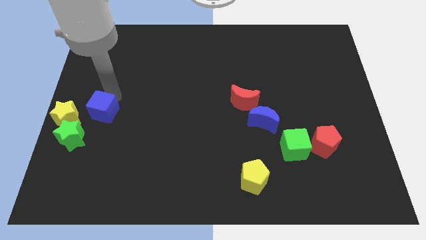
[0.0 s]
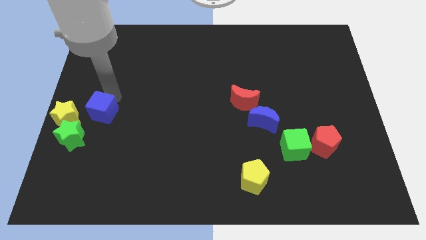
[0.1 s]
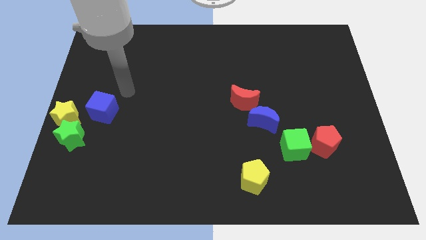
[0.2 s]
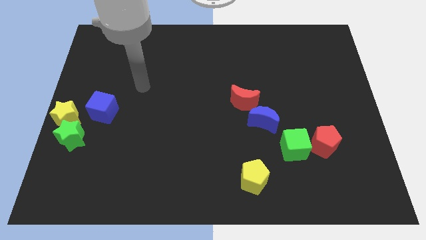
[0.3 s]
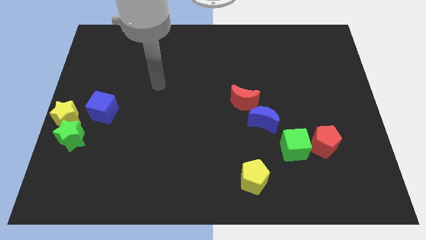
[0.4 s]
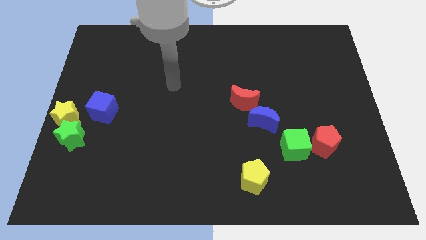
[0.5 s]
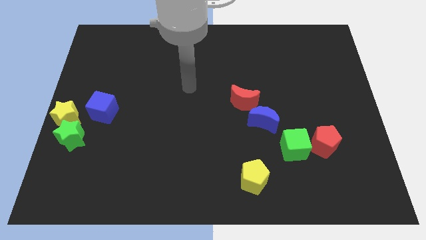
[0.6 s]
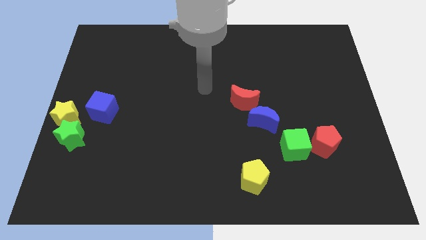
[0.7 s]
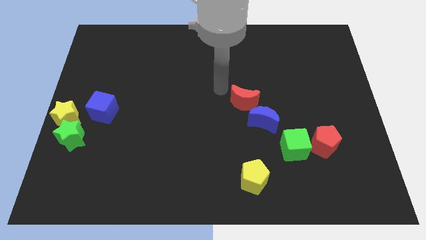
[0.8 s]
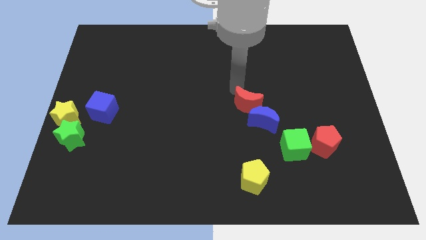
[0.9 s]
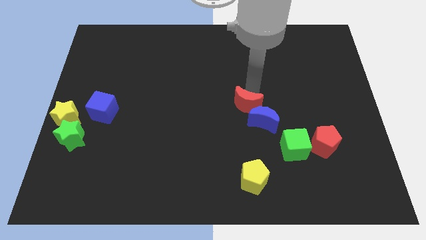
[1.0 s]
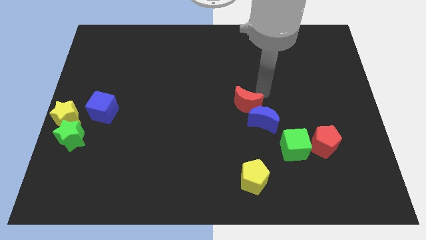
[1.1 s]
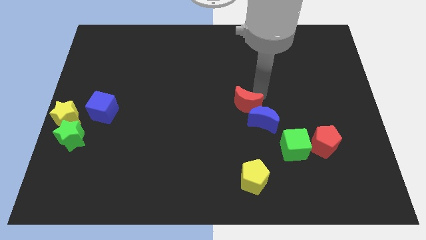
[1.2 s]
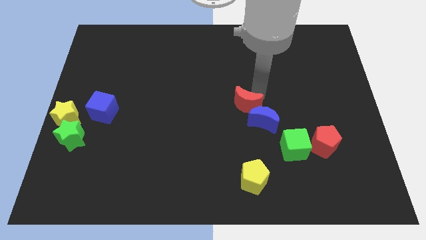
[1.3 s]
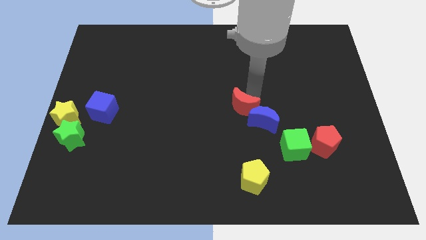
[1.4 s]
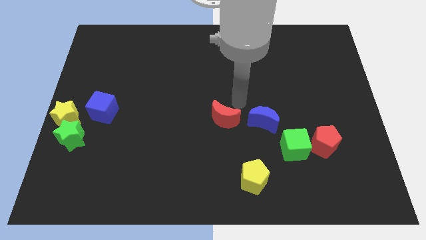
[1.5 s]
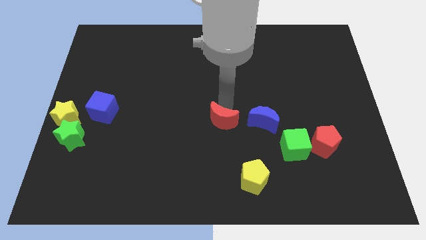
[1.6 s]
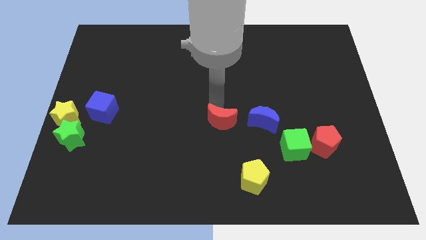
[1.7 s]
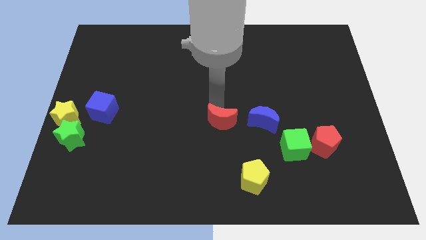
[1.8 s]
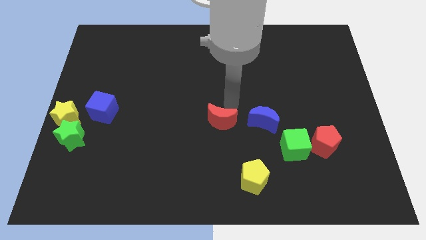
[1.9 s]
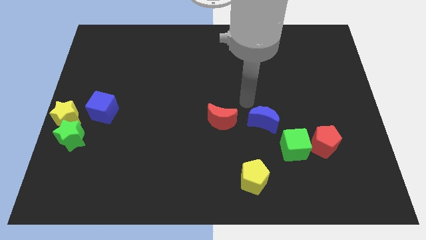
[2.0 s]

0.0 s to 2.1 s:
push the red crescent to the left of the blue crescent

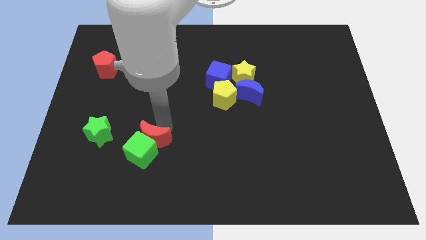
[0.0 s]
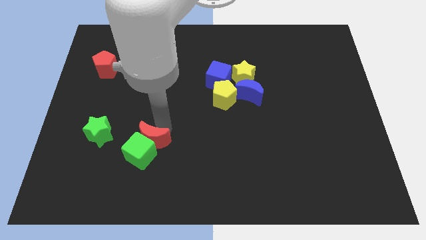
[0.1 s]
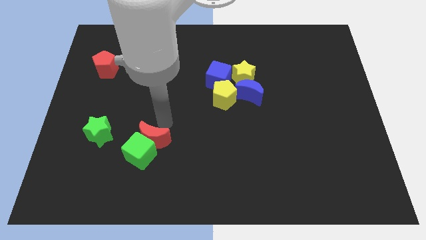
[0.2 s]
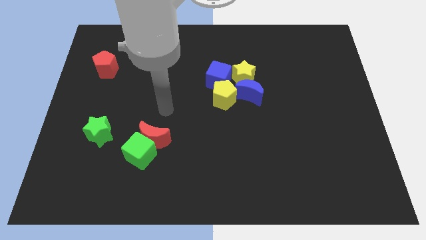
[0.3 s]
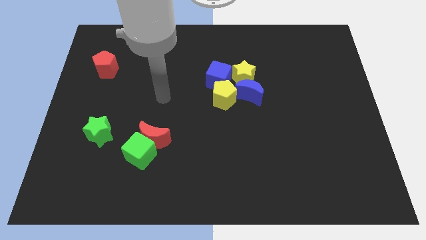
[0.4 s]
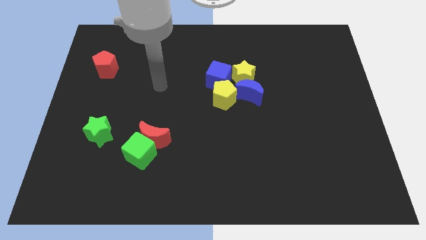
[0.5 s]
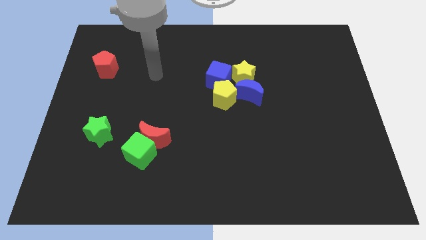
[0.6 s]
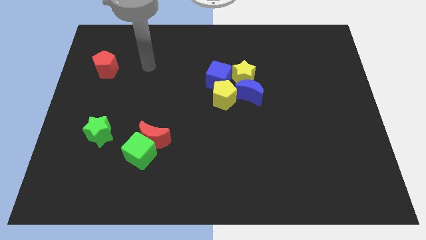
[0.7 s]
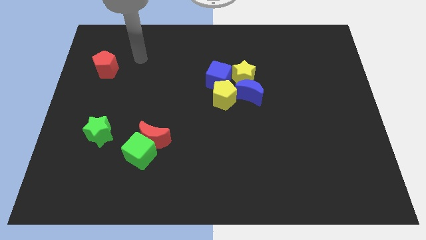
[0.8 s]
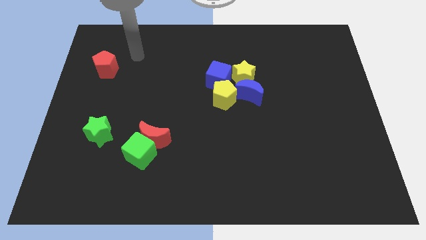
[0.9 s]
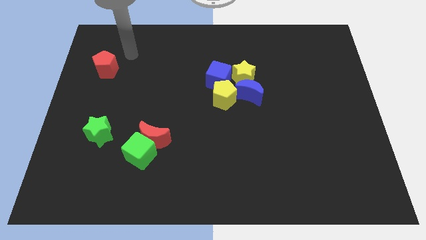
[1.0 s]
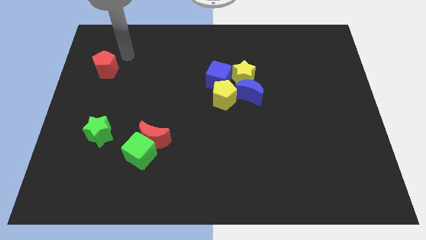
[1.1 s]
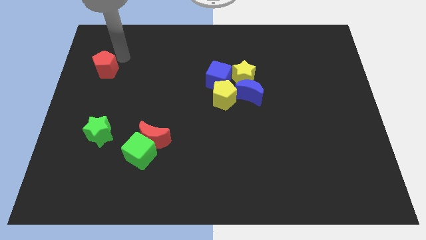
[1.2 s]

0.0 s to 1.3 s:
move the arm away from the red moon

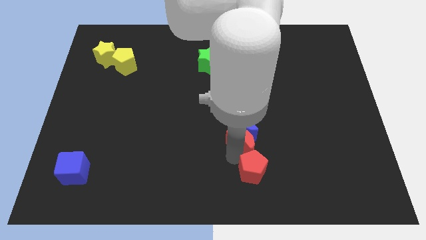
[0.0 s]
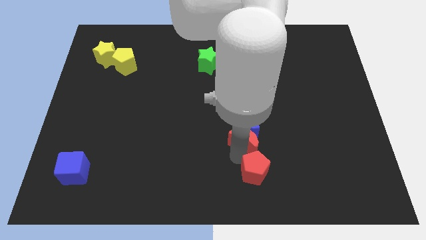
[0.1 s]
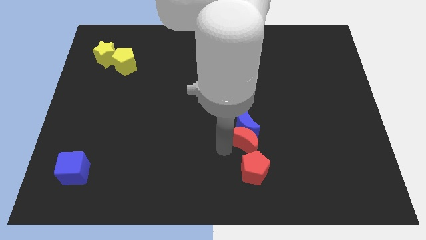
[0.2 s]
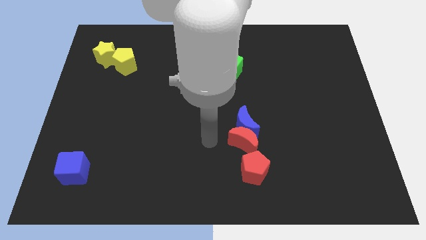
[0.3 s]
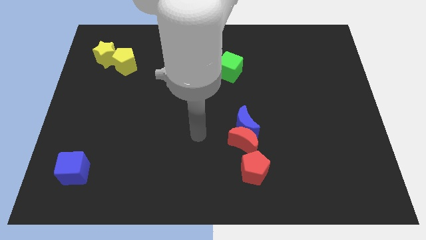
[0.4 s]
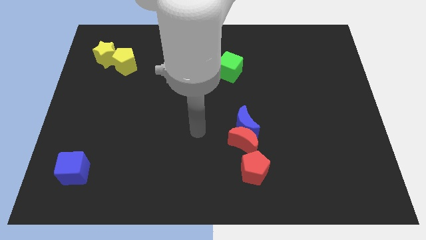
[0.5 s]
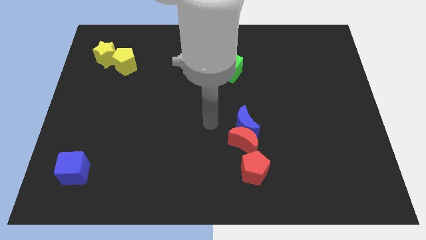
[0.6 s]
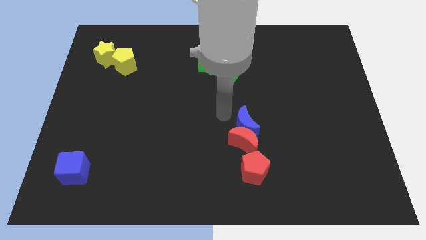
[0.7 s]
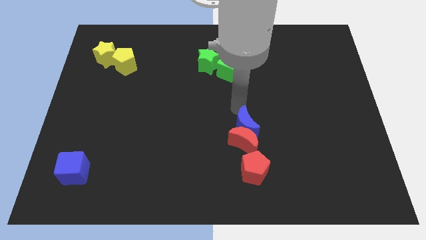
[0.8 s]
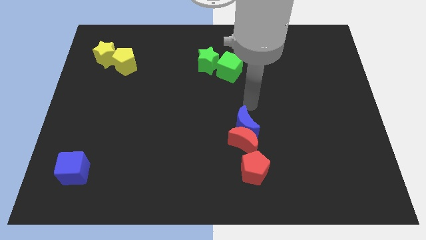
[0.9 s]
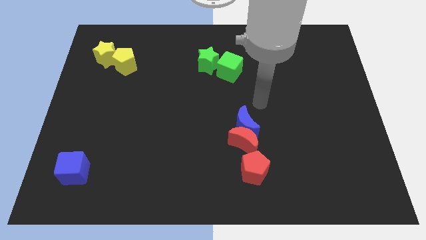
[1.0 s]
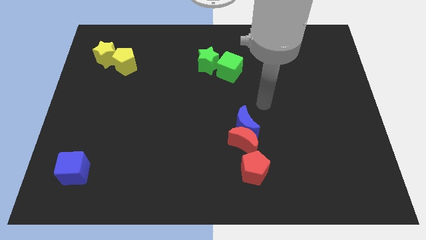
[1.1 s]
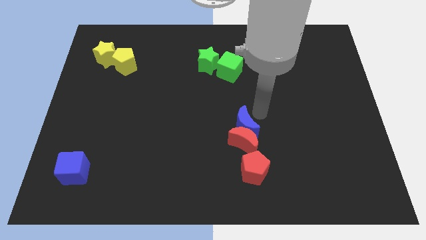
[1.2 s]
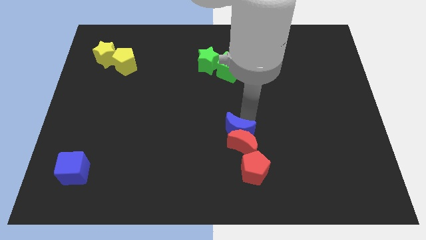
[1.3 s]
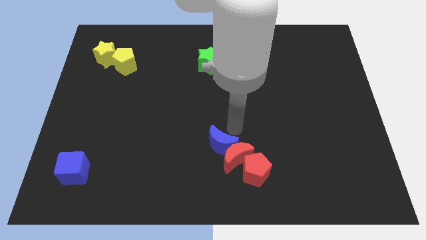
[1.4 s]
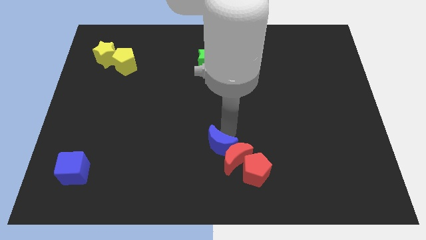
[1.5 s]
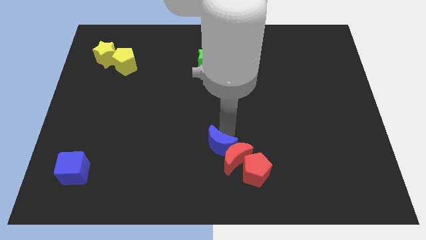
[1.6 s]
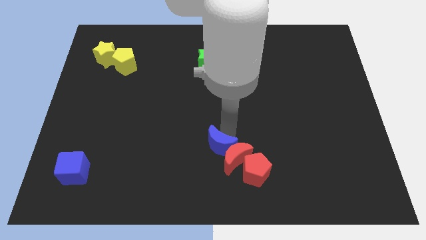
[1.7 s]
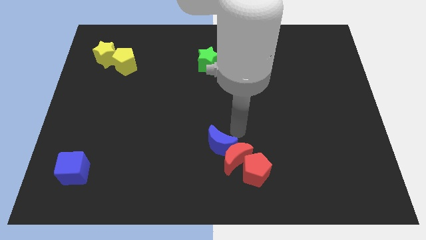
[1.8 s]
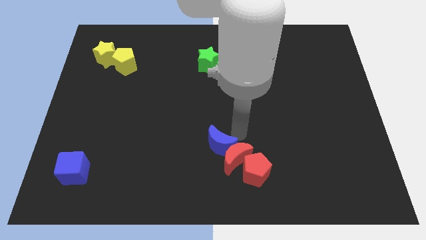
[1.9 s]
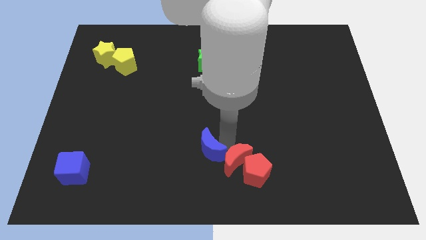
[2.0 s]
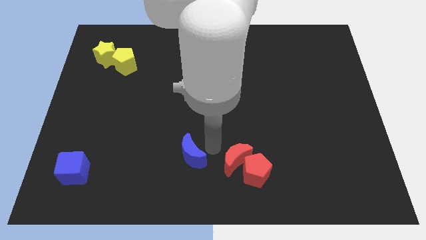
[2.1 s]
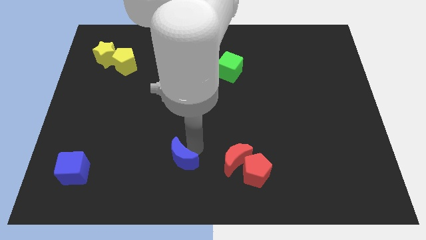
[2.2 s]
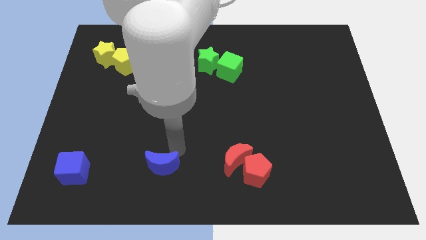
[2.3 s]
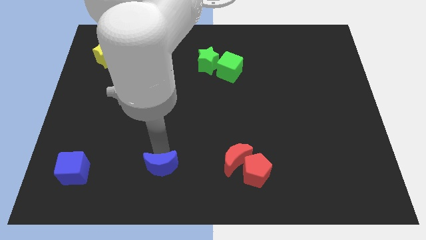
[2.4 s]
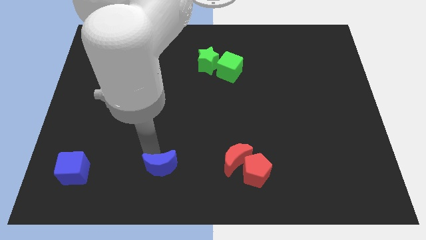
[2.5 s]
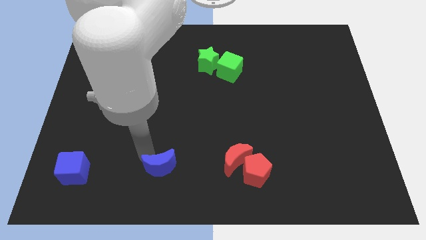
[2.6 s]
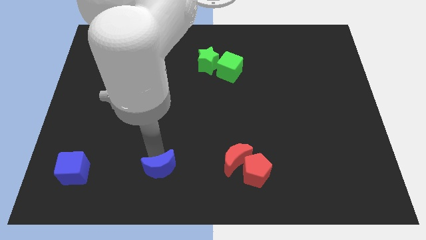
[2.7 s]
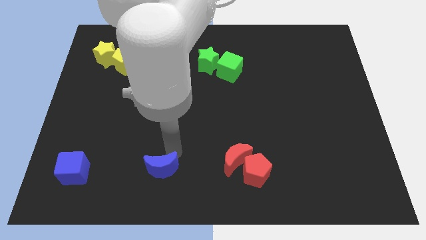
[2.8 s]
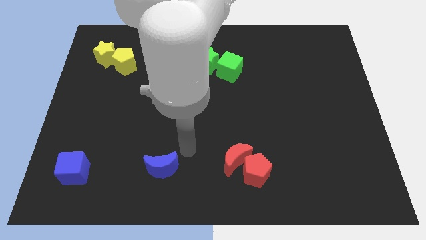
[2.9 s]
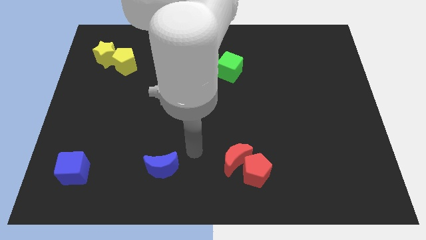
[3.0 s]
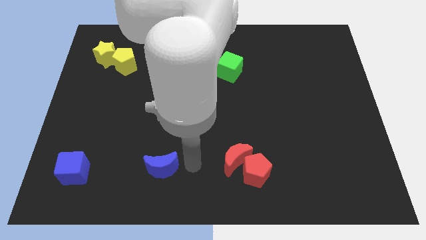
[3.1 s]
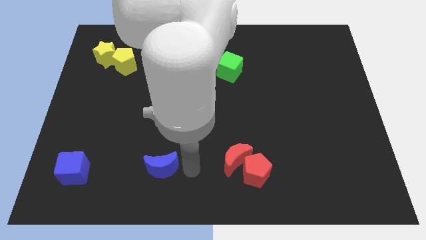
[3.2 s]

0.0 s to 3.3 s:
push the blue moon towards the blue cube

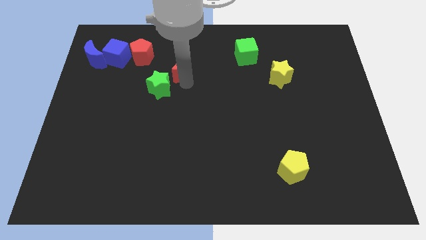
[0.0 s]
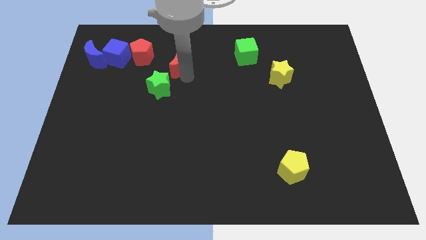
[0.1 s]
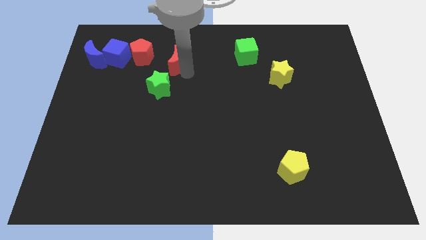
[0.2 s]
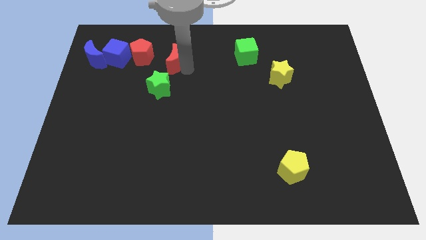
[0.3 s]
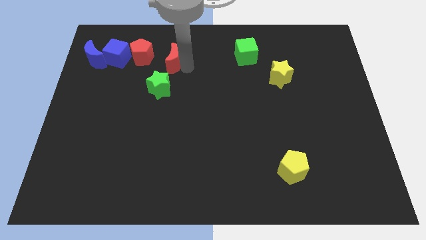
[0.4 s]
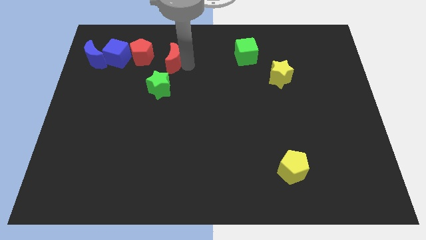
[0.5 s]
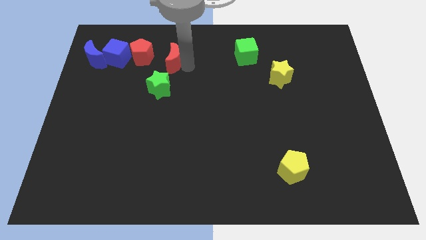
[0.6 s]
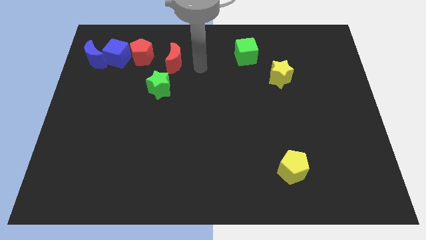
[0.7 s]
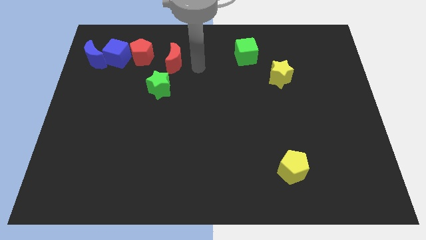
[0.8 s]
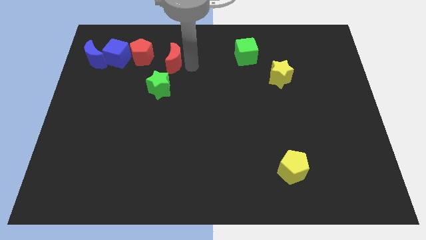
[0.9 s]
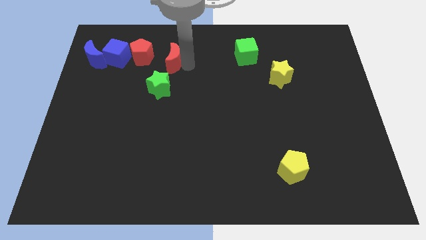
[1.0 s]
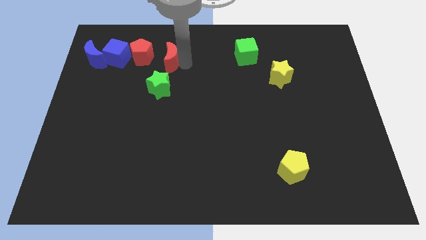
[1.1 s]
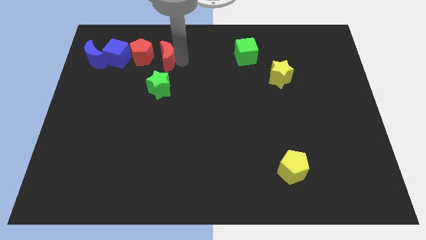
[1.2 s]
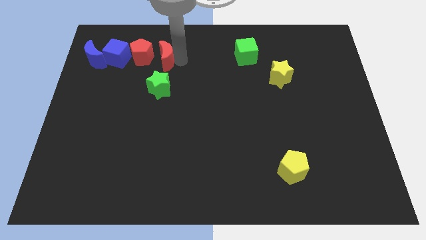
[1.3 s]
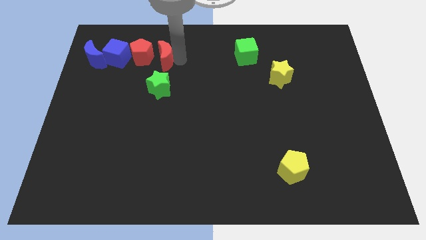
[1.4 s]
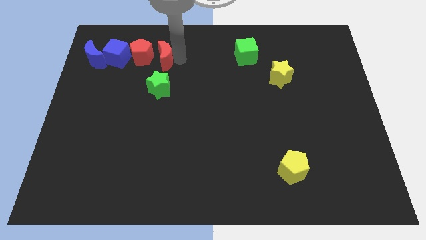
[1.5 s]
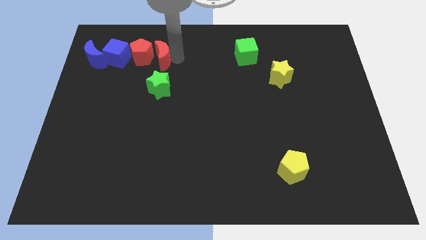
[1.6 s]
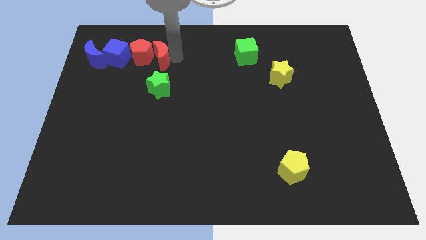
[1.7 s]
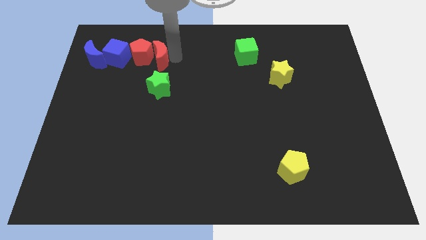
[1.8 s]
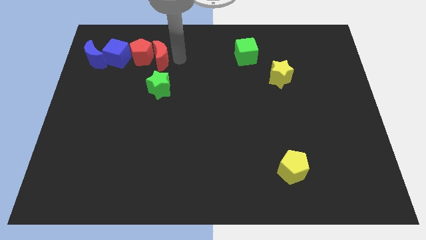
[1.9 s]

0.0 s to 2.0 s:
put the red moon at the right side of the red pentagon

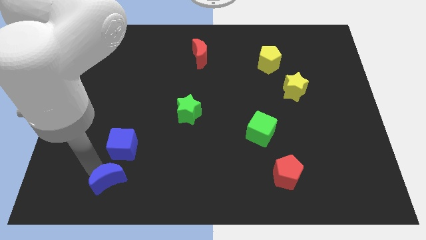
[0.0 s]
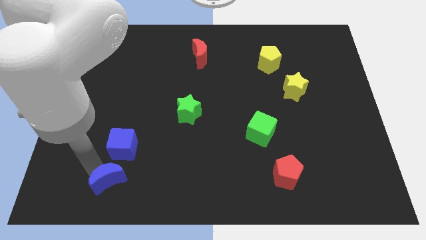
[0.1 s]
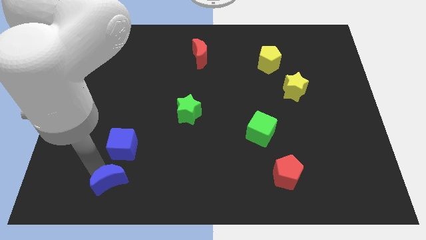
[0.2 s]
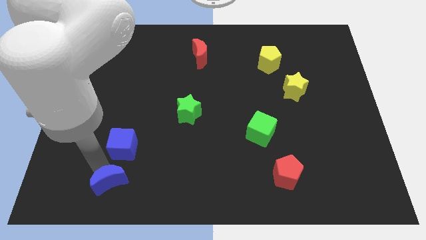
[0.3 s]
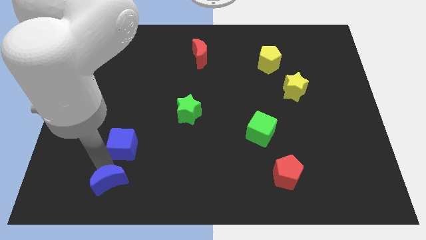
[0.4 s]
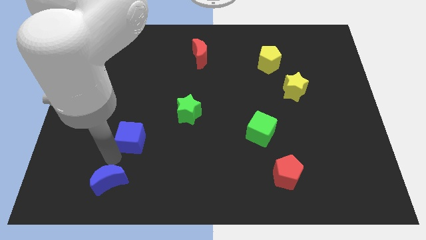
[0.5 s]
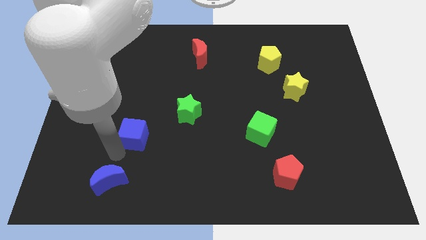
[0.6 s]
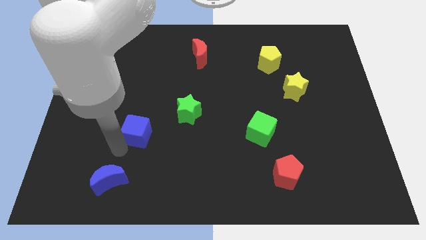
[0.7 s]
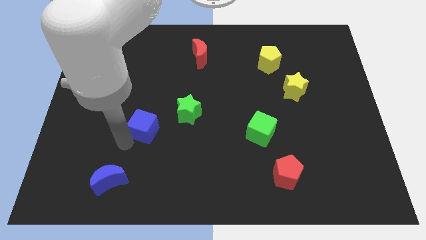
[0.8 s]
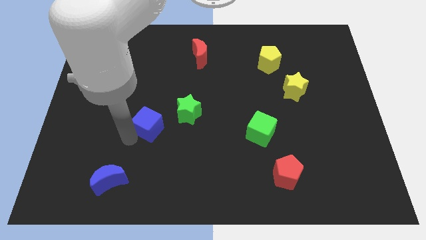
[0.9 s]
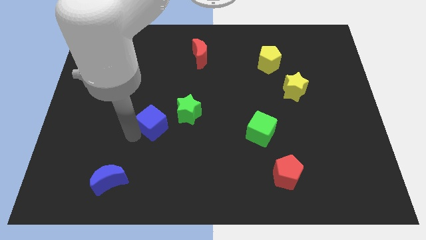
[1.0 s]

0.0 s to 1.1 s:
separate blue cube from blue moon
